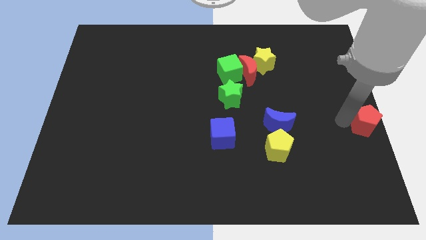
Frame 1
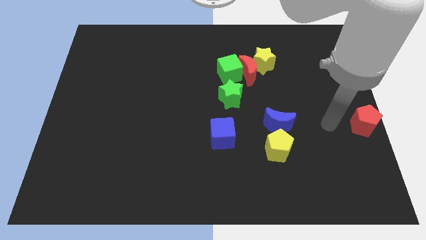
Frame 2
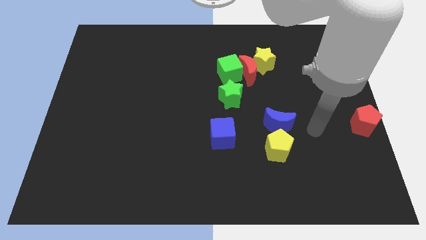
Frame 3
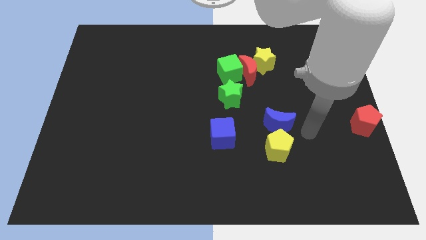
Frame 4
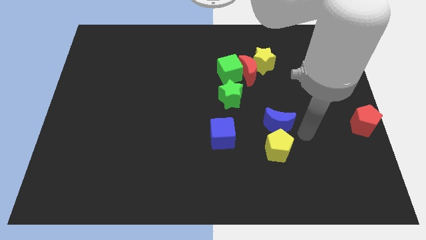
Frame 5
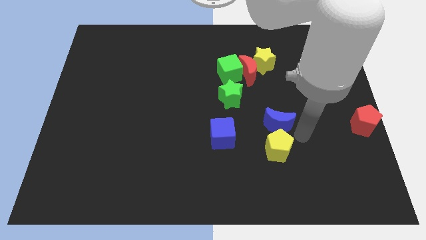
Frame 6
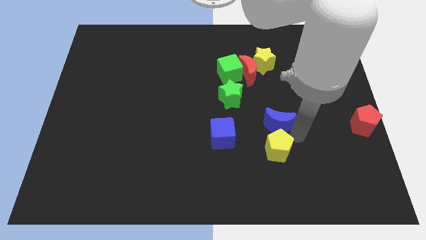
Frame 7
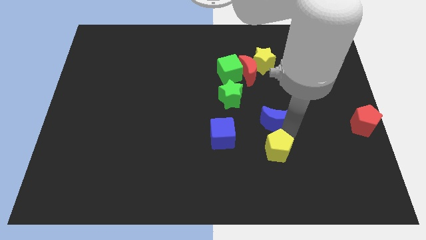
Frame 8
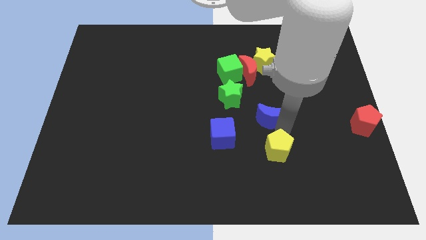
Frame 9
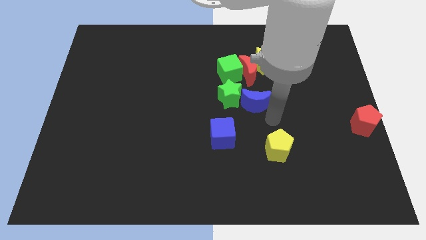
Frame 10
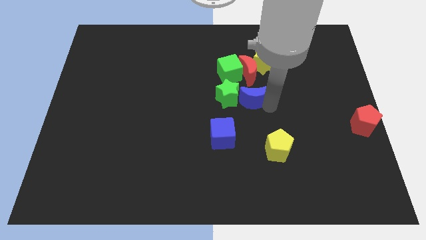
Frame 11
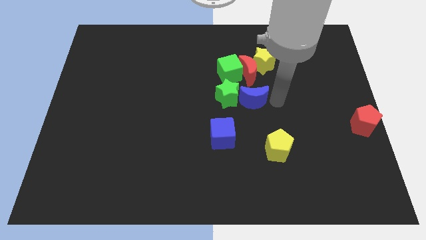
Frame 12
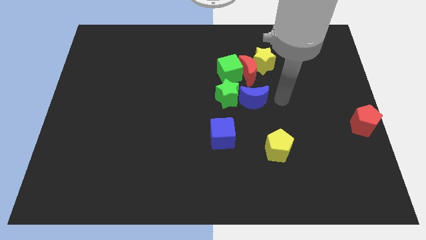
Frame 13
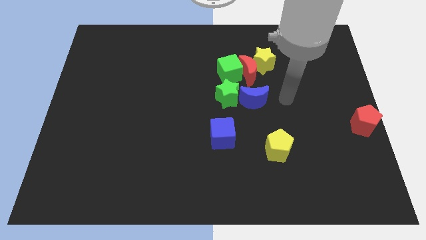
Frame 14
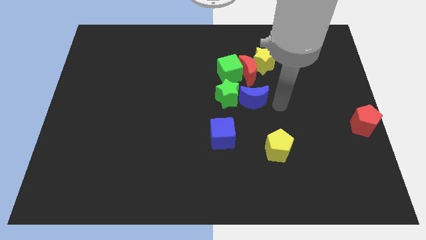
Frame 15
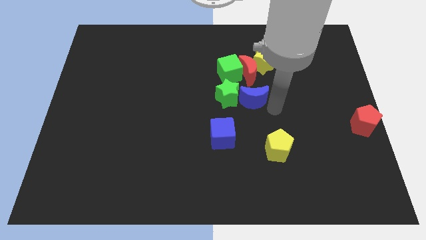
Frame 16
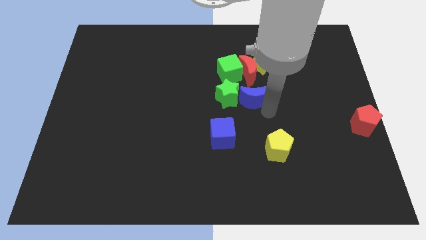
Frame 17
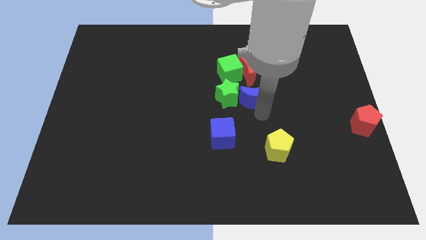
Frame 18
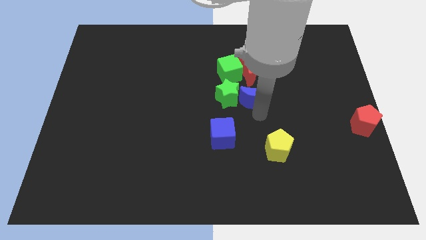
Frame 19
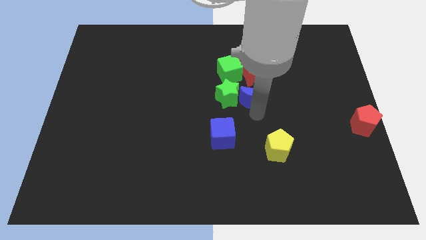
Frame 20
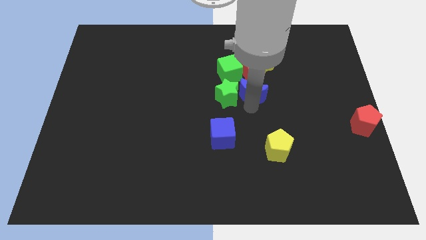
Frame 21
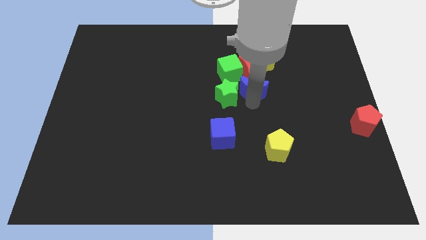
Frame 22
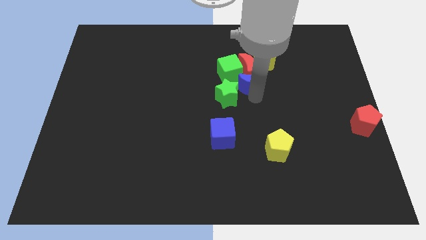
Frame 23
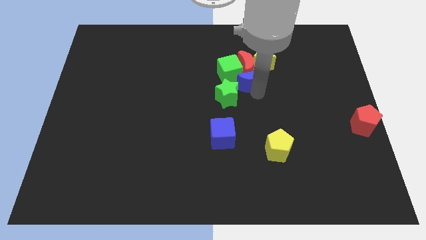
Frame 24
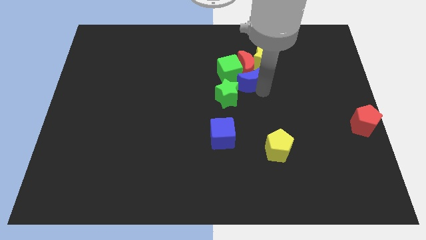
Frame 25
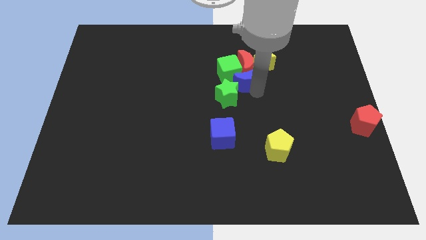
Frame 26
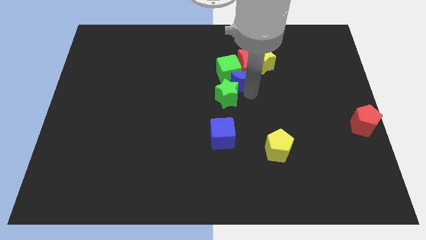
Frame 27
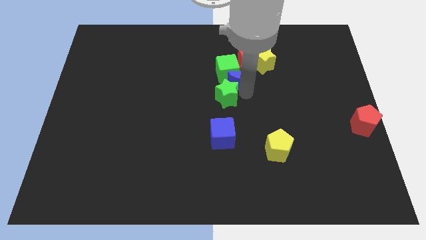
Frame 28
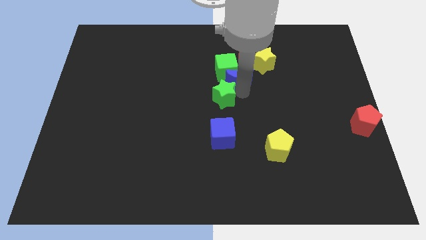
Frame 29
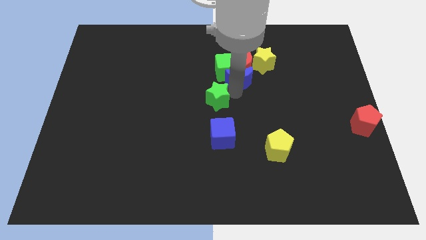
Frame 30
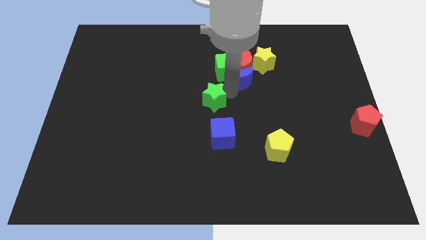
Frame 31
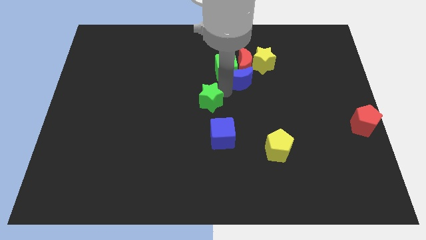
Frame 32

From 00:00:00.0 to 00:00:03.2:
push the blue crescent into the red moon

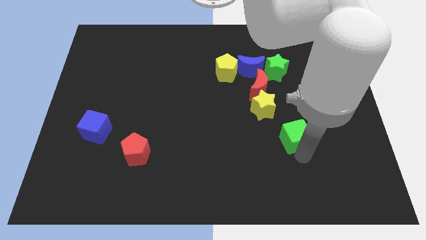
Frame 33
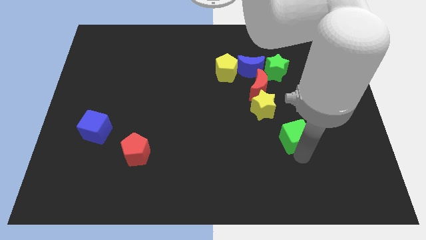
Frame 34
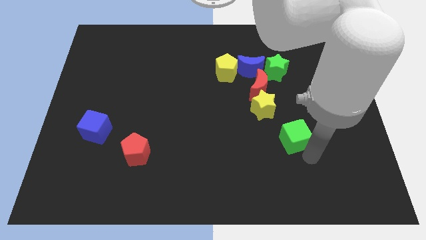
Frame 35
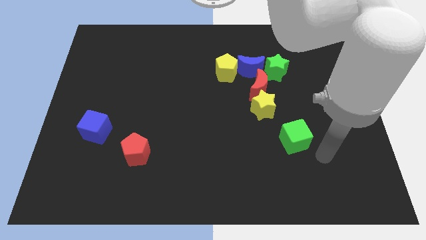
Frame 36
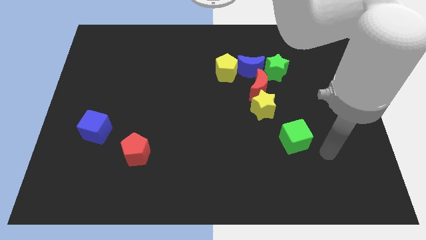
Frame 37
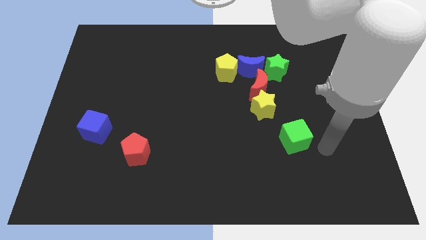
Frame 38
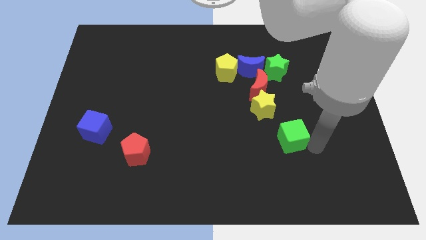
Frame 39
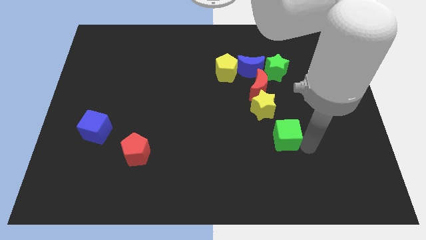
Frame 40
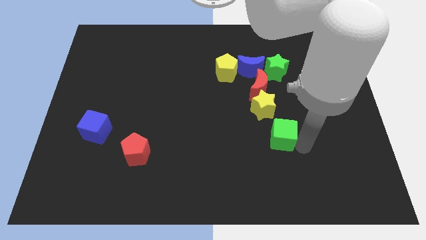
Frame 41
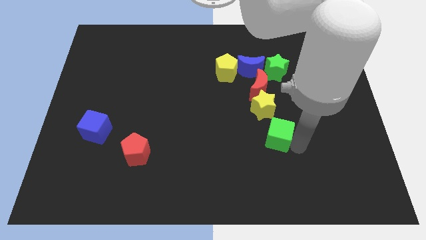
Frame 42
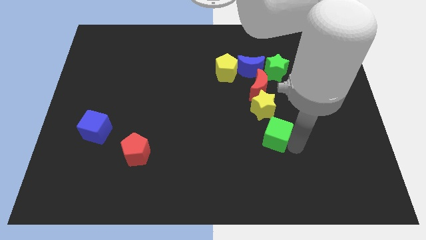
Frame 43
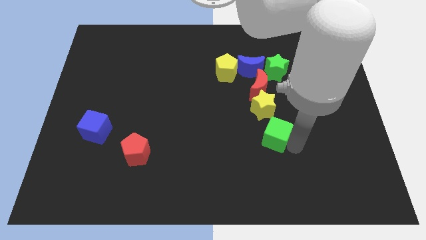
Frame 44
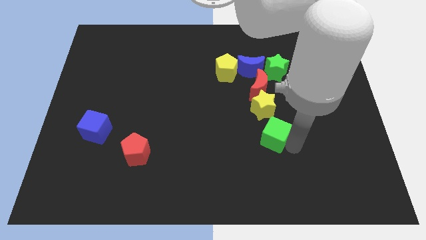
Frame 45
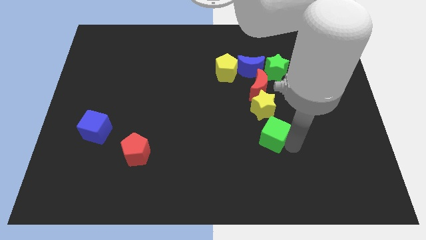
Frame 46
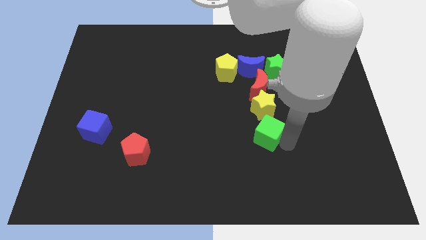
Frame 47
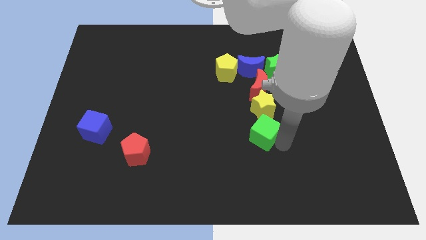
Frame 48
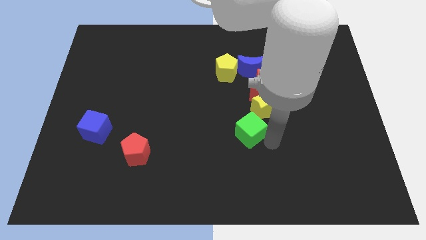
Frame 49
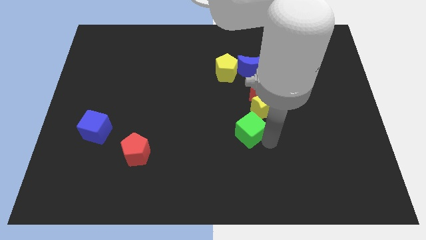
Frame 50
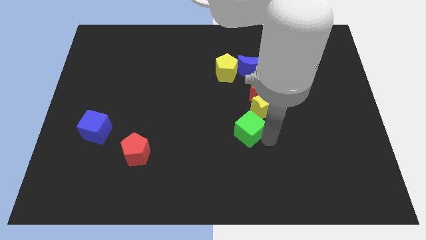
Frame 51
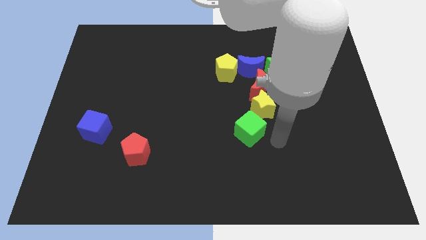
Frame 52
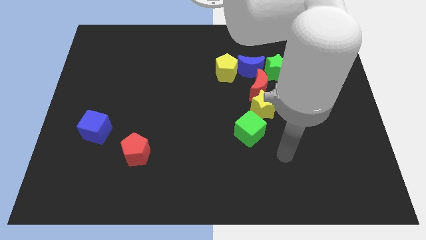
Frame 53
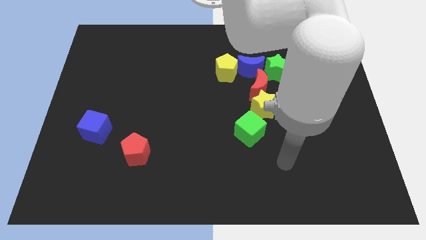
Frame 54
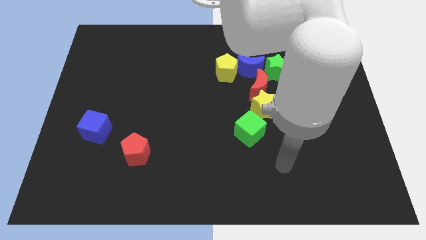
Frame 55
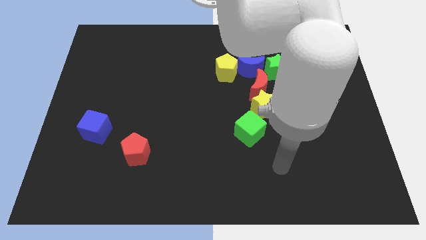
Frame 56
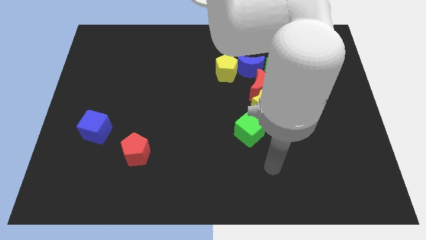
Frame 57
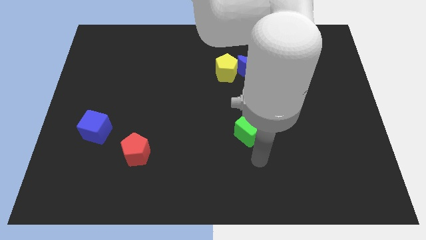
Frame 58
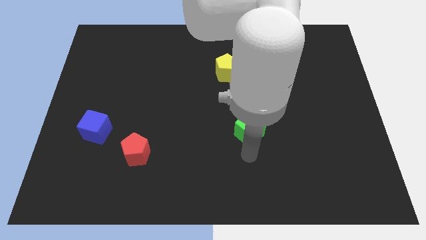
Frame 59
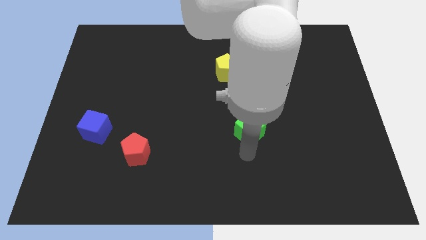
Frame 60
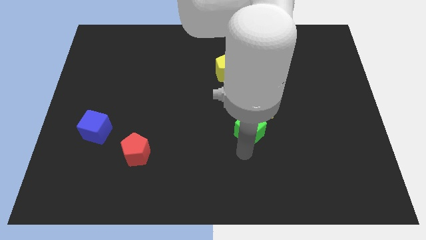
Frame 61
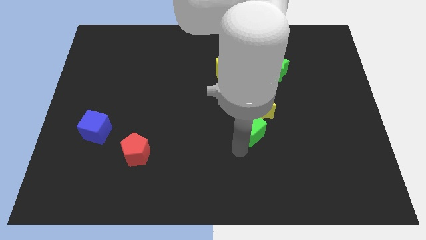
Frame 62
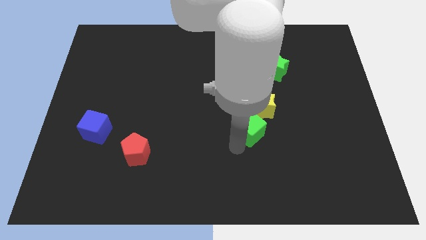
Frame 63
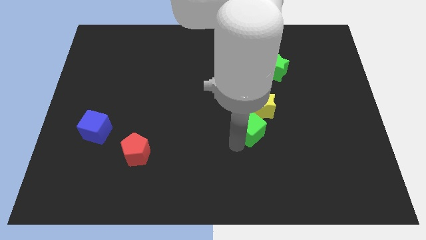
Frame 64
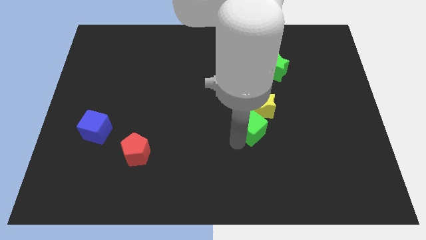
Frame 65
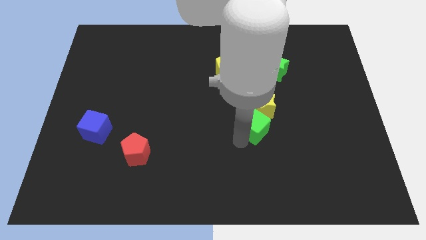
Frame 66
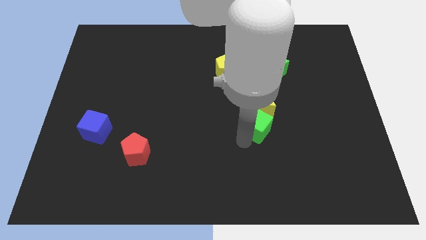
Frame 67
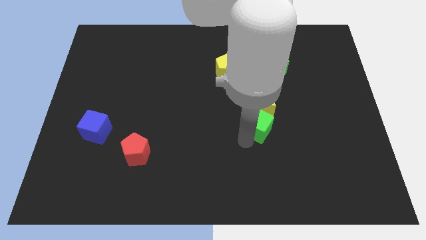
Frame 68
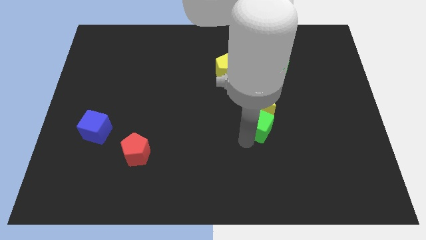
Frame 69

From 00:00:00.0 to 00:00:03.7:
push the green cube into the yellow star

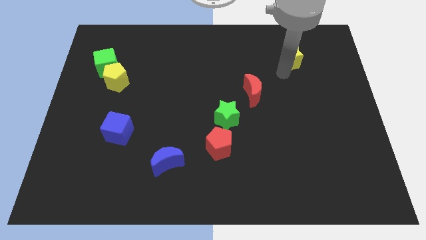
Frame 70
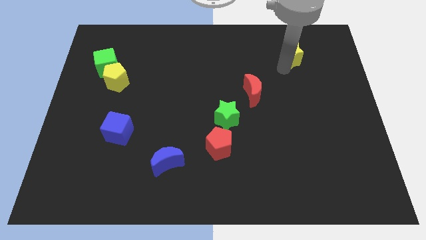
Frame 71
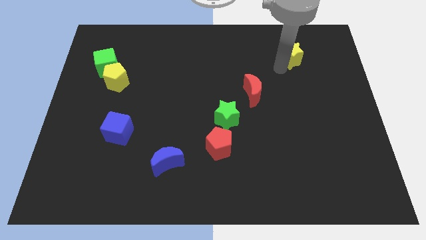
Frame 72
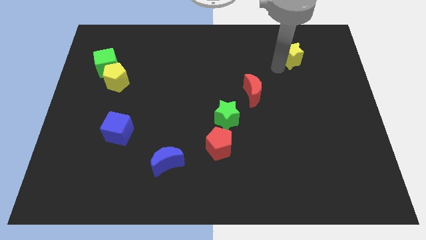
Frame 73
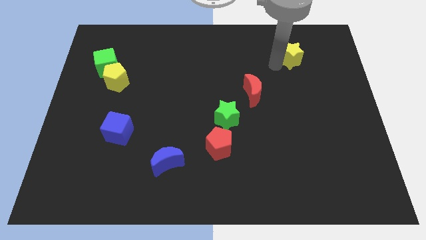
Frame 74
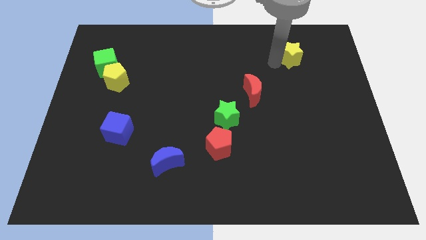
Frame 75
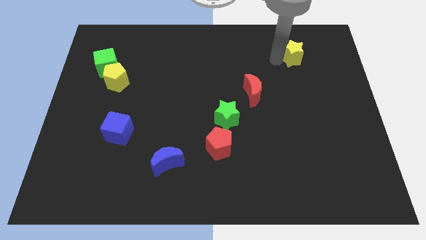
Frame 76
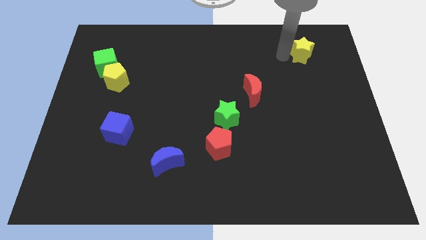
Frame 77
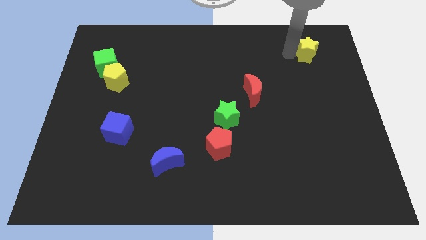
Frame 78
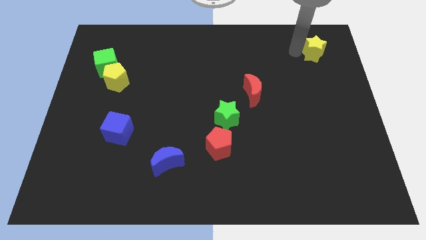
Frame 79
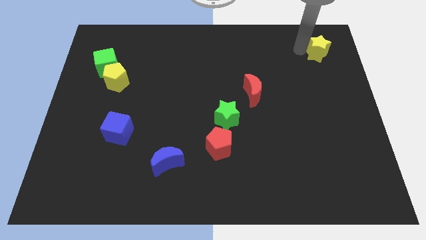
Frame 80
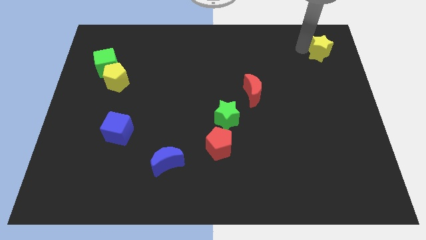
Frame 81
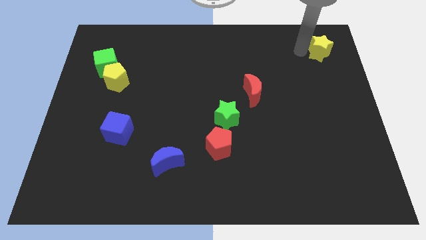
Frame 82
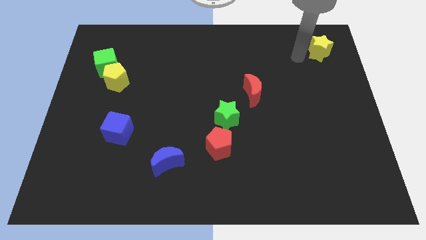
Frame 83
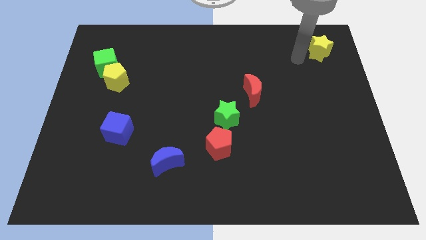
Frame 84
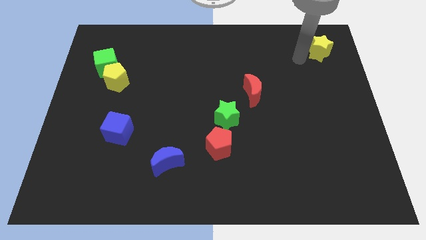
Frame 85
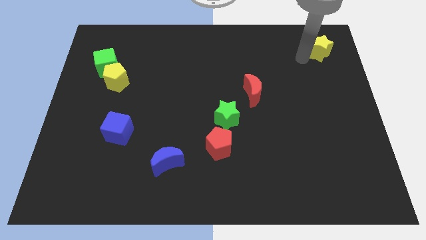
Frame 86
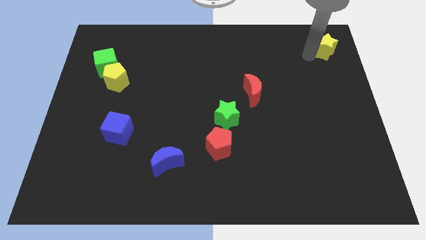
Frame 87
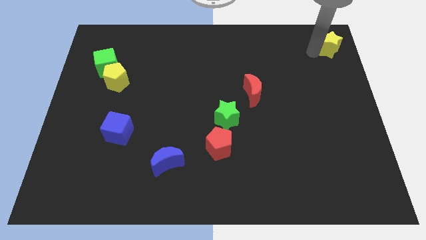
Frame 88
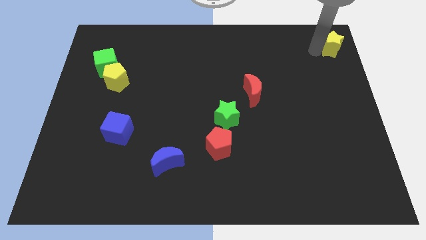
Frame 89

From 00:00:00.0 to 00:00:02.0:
move the yellow star towards the top right
